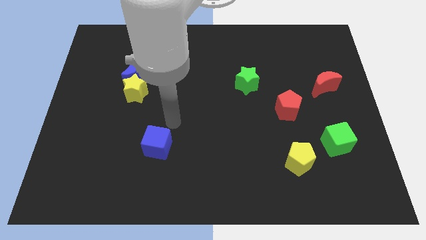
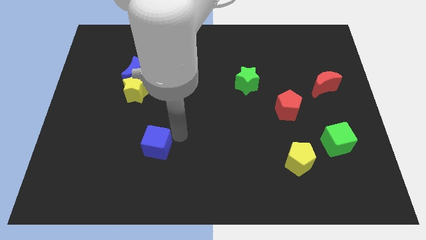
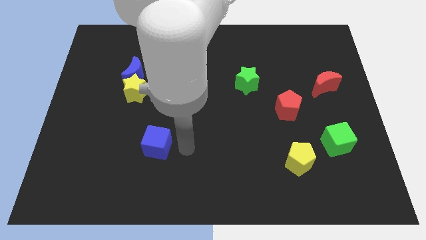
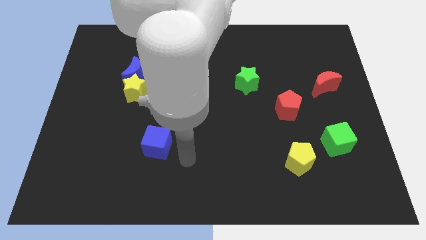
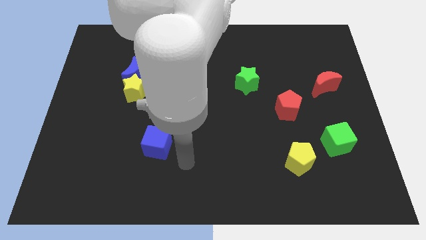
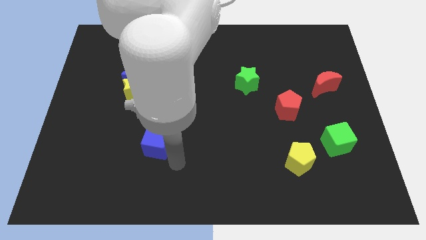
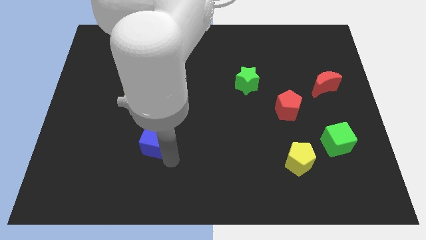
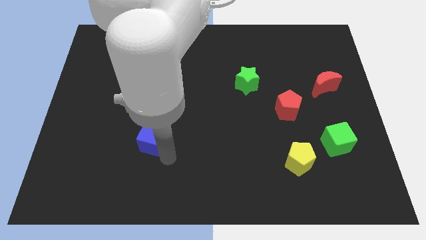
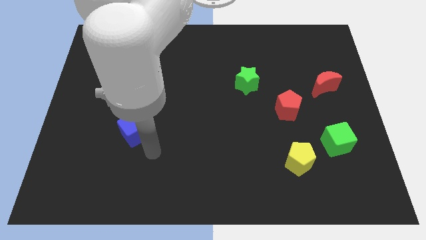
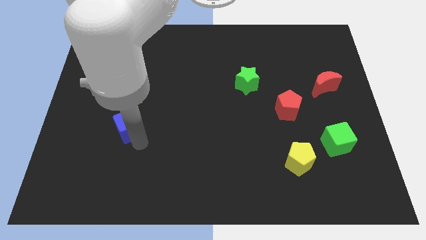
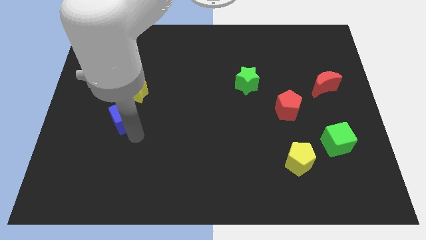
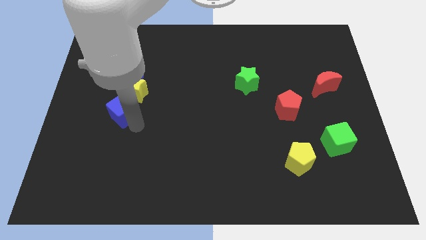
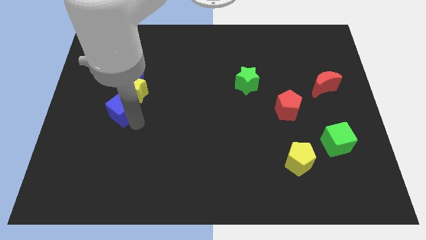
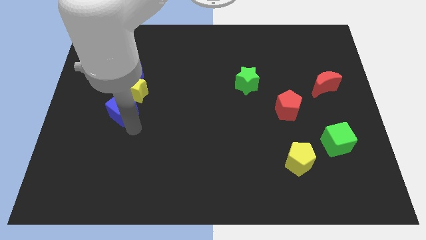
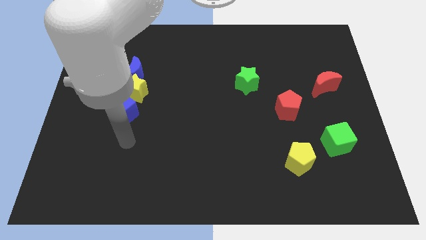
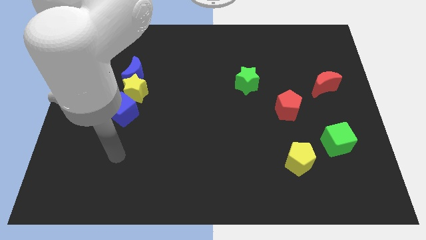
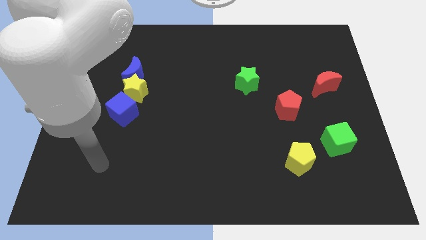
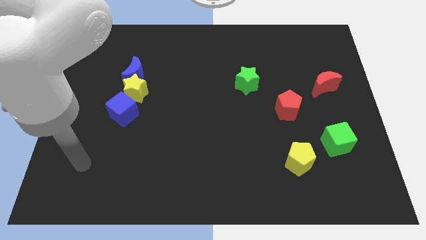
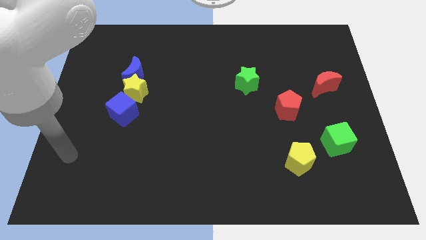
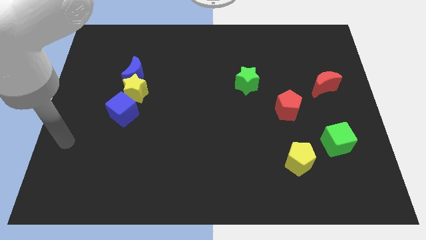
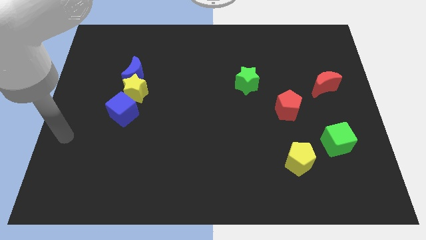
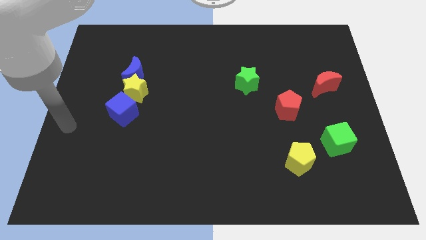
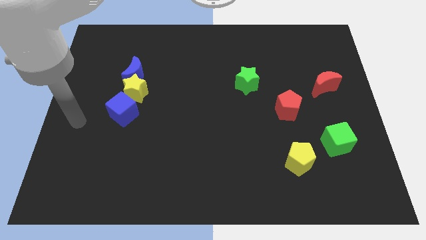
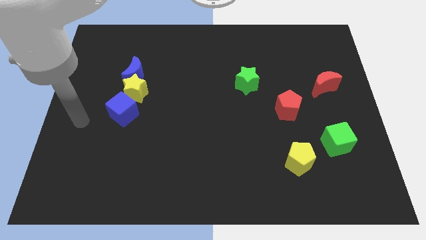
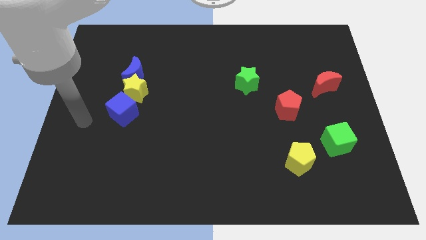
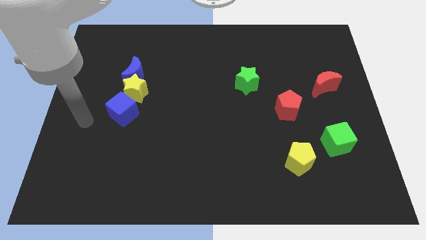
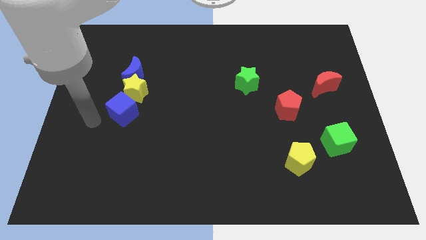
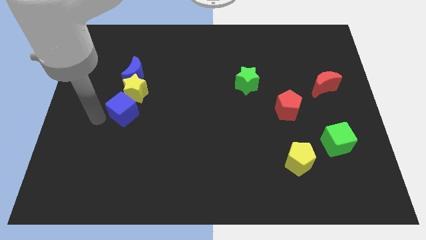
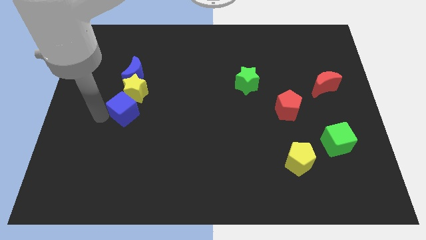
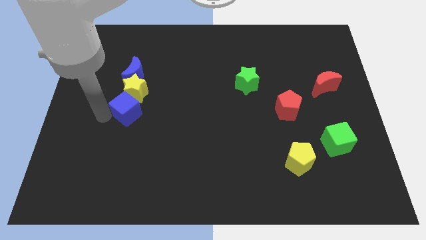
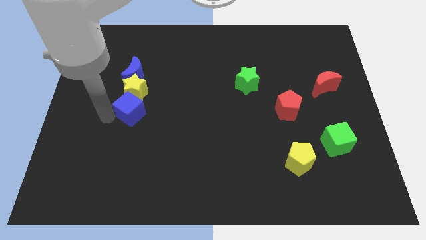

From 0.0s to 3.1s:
place the blue cube at the bottom left side of the yellow star

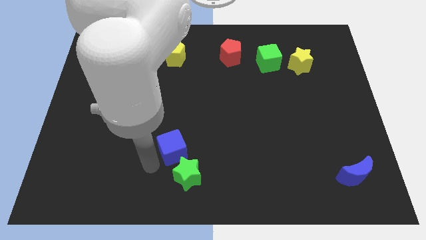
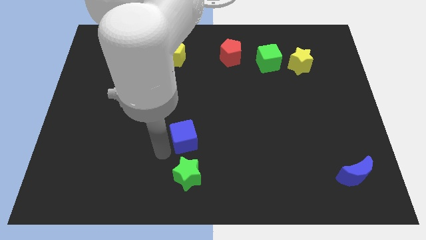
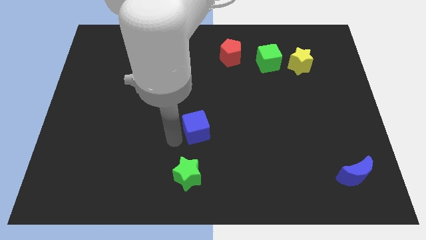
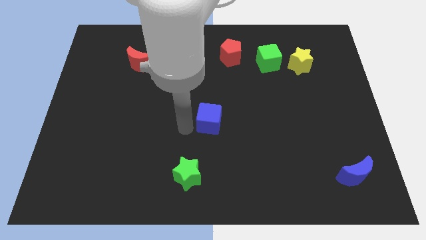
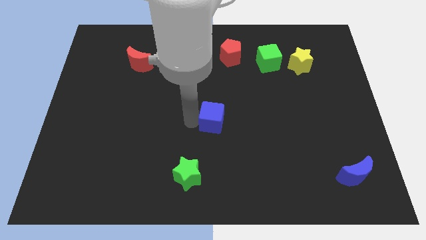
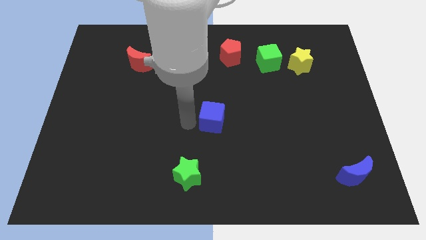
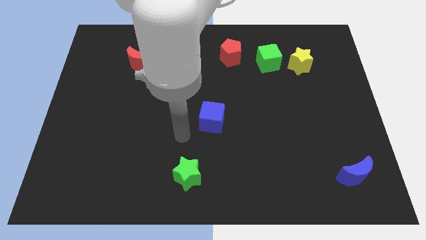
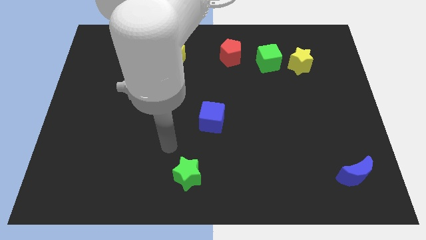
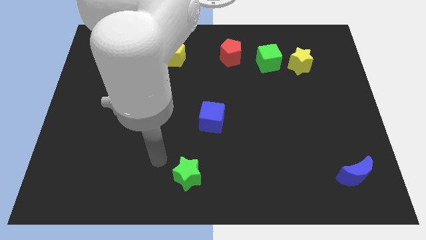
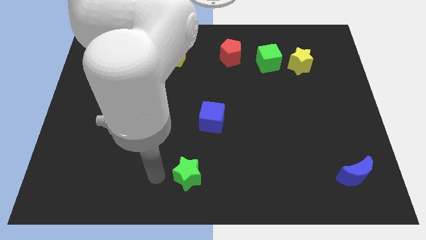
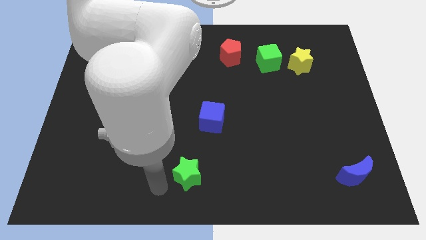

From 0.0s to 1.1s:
move the blue cube to the center

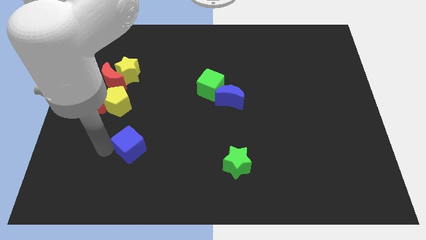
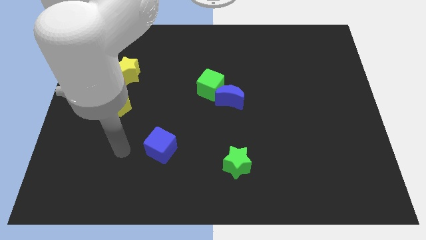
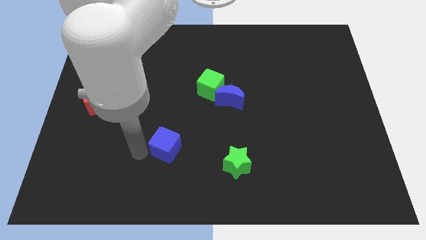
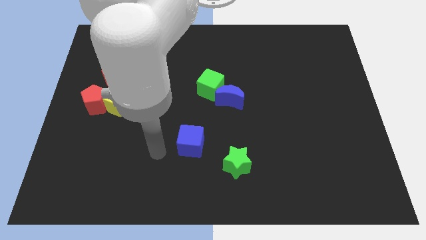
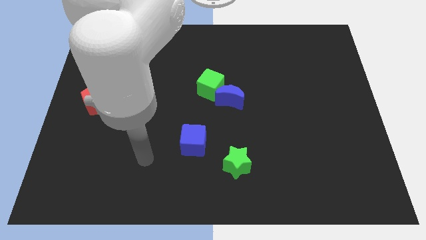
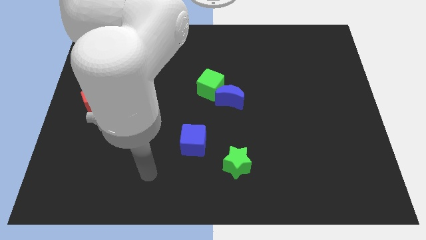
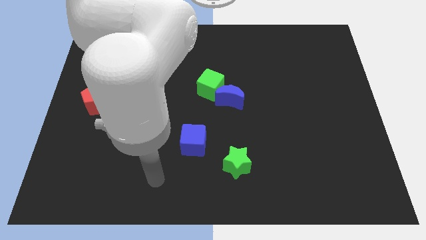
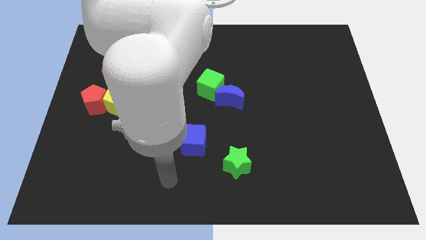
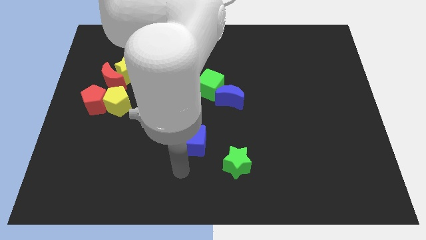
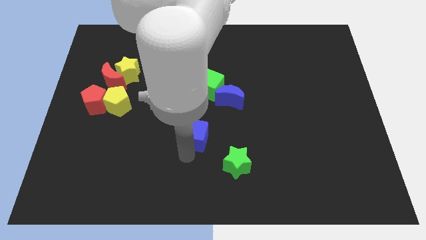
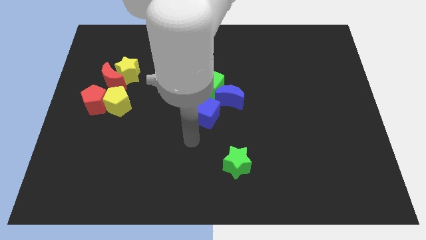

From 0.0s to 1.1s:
push the blue cube towards the center of the board

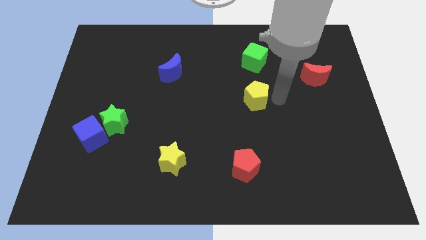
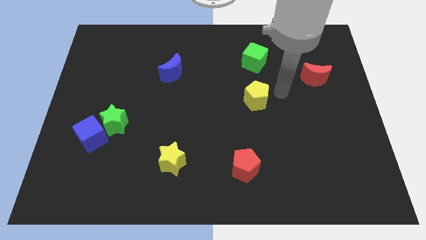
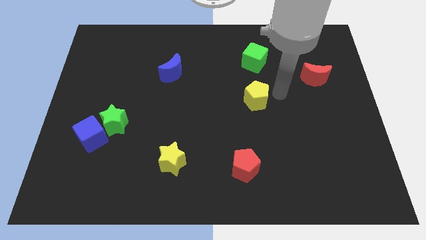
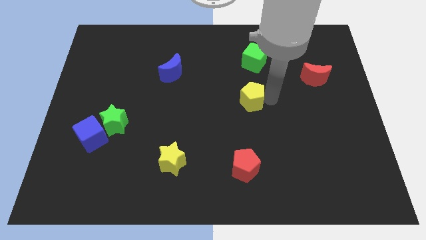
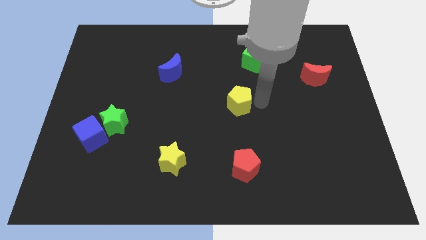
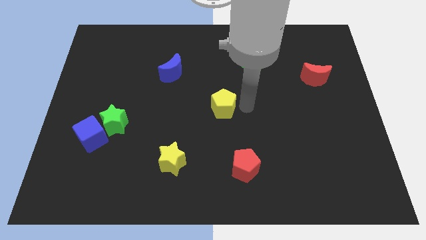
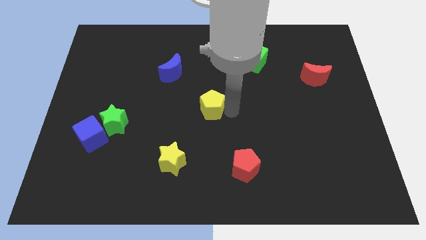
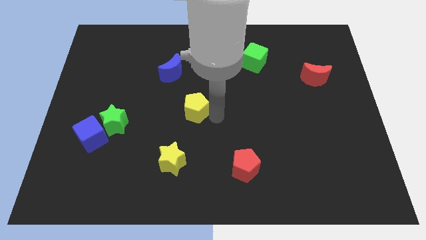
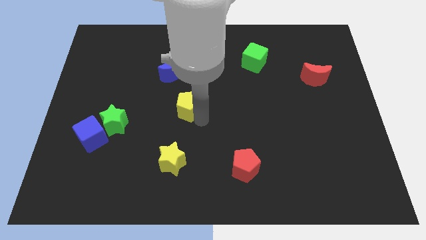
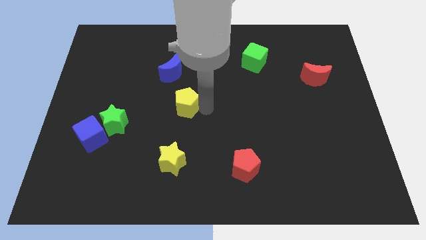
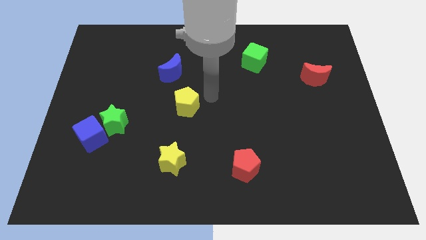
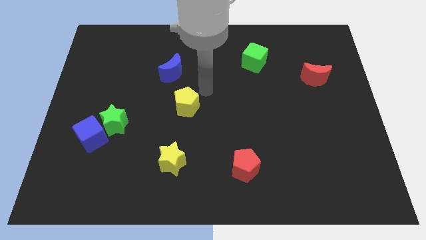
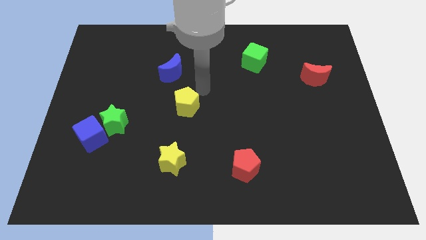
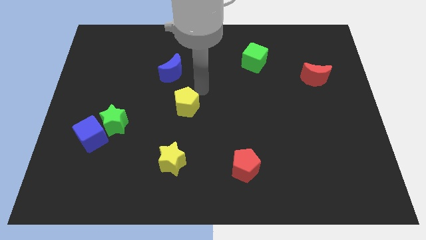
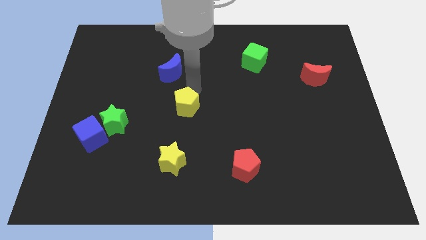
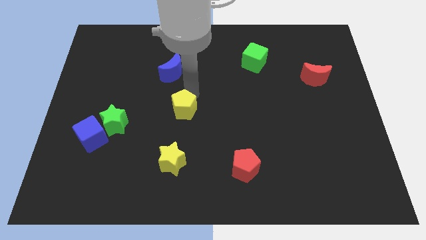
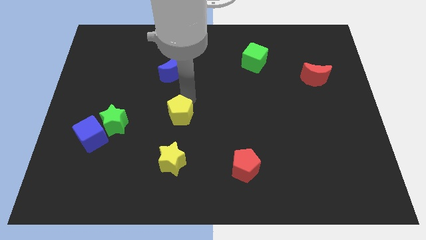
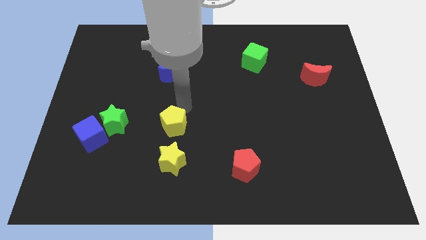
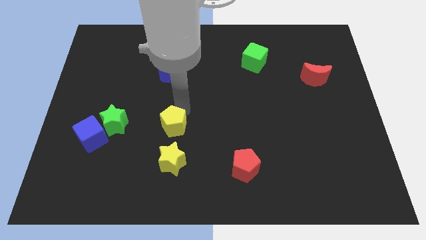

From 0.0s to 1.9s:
place the yellow pentagon above the yellow star

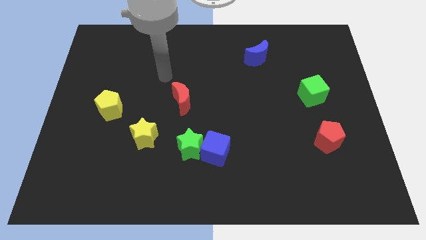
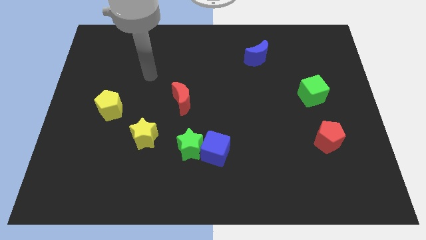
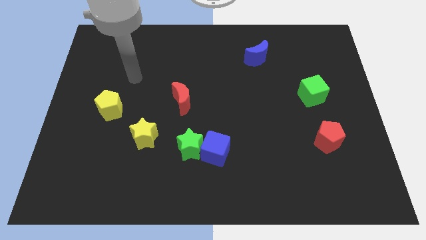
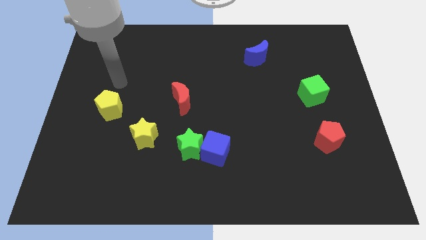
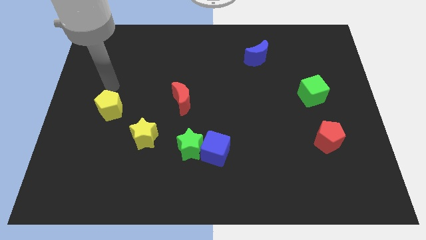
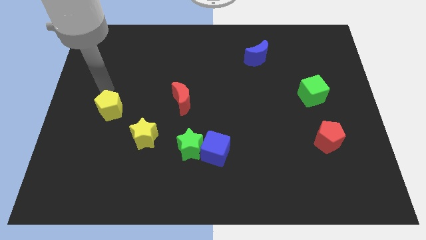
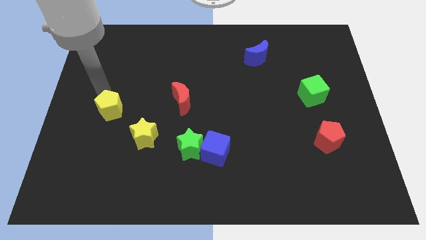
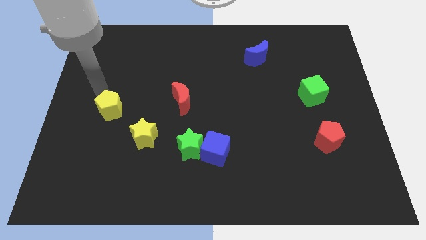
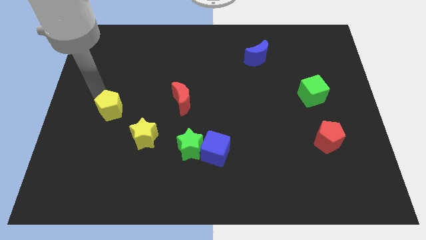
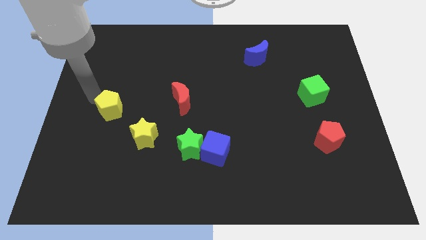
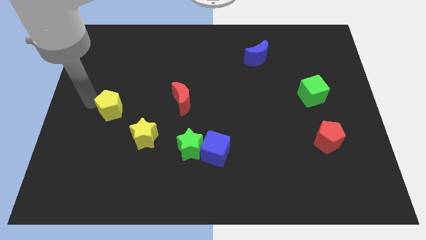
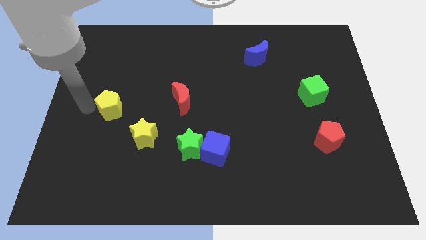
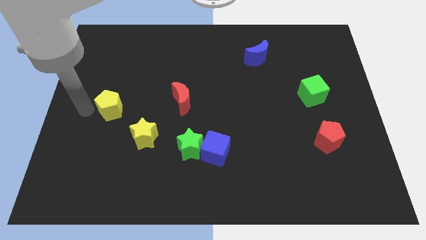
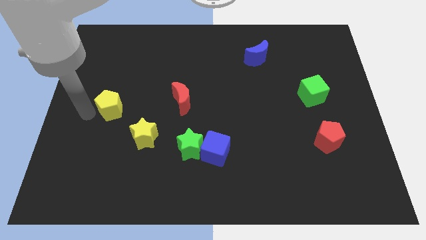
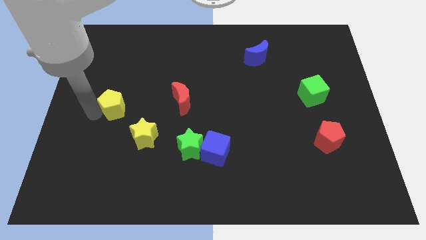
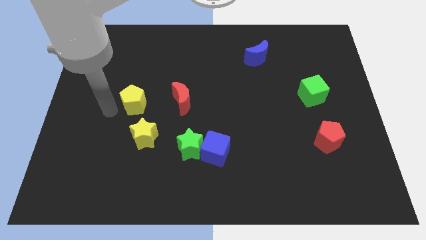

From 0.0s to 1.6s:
place the arm left to the yellow pentagon
